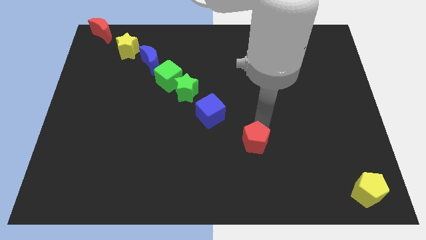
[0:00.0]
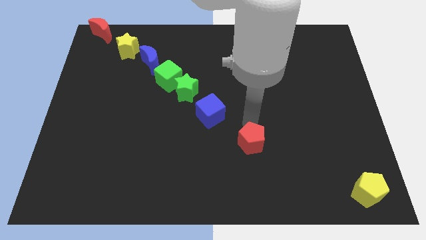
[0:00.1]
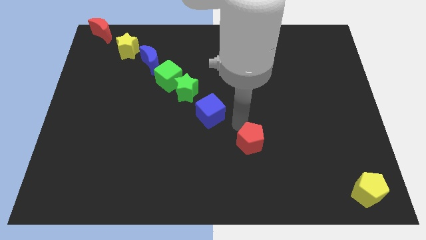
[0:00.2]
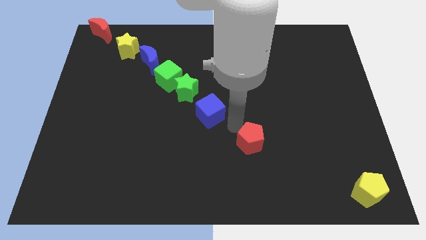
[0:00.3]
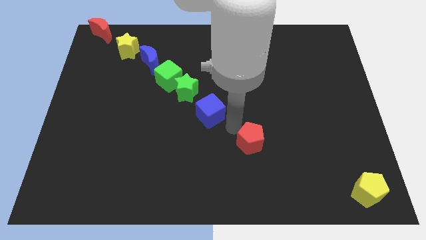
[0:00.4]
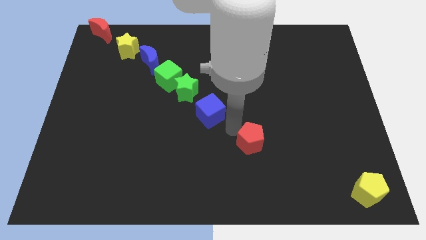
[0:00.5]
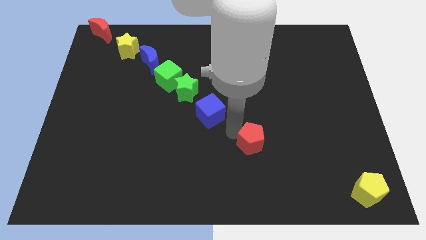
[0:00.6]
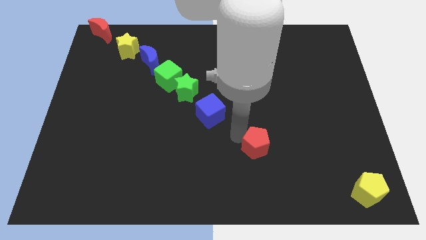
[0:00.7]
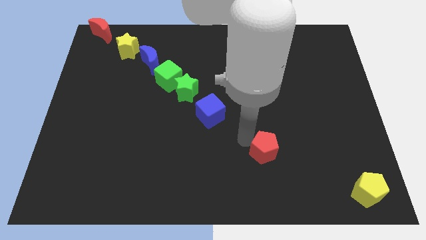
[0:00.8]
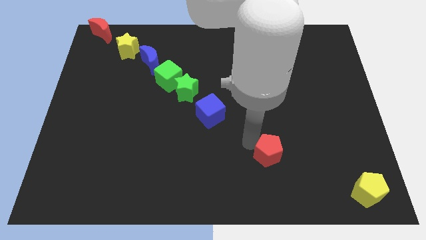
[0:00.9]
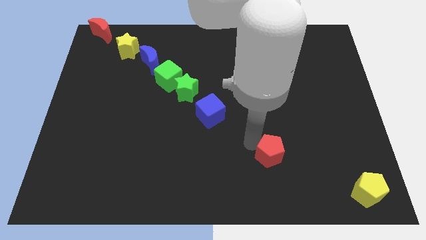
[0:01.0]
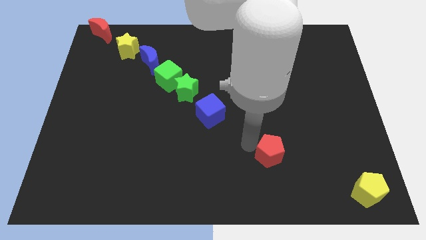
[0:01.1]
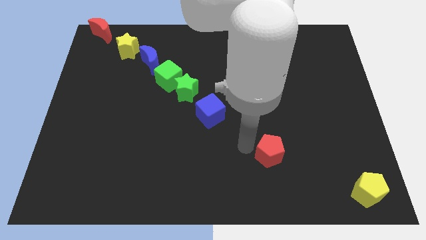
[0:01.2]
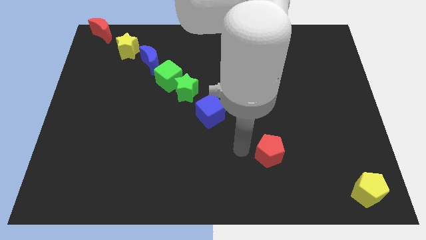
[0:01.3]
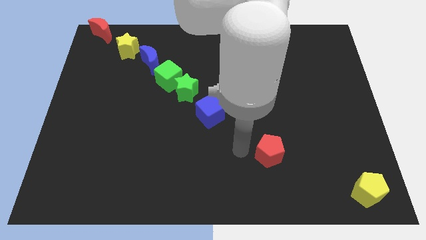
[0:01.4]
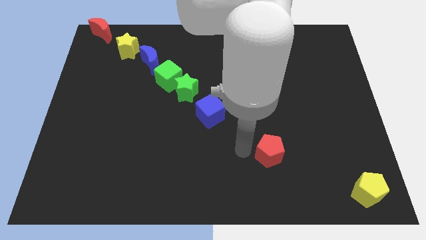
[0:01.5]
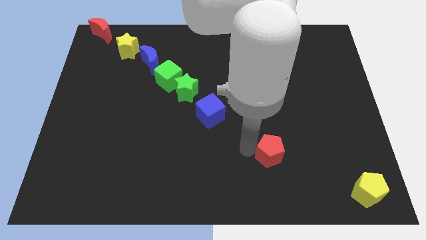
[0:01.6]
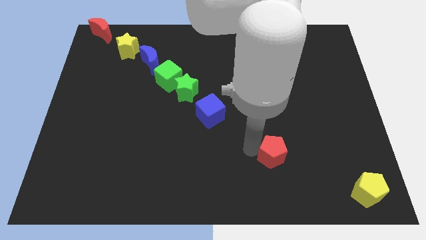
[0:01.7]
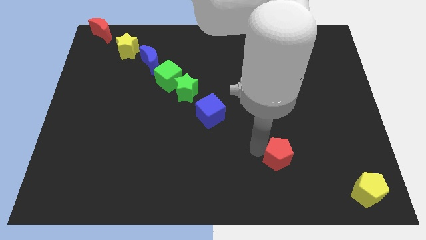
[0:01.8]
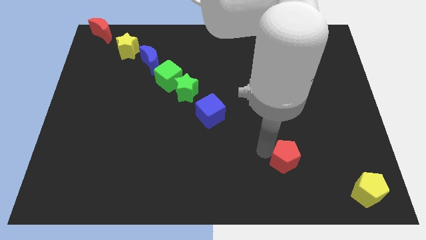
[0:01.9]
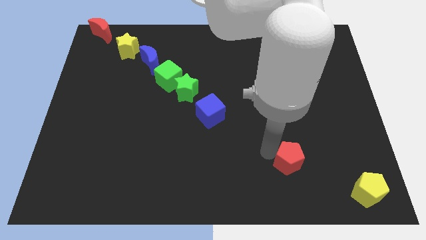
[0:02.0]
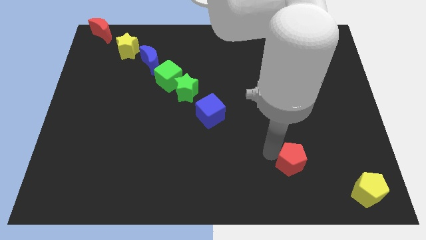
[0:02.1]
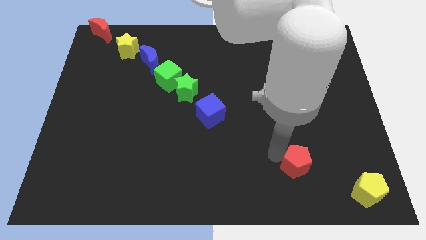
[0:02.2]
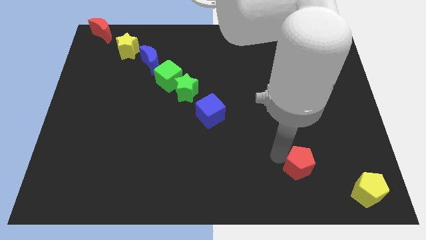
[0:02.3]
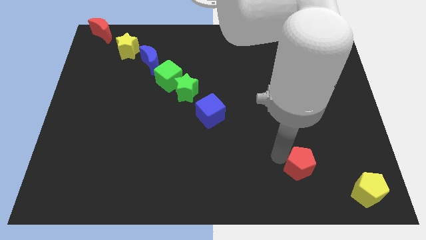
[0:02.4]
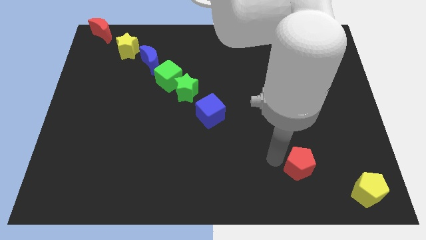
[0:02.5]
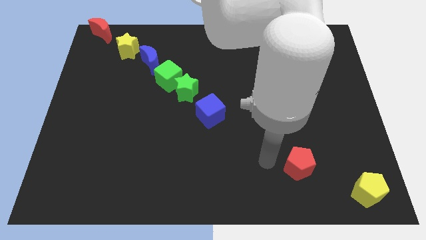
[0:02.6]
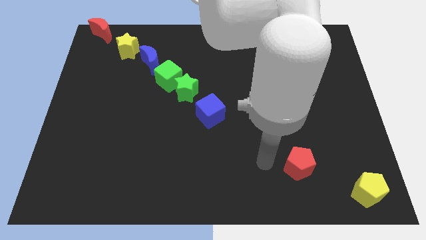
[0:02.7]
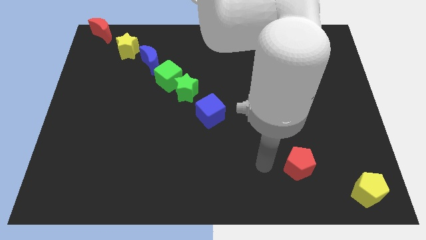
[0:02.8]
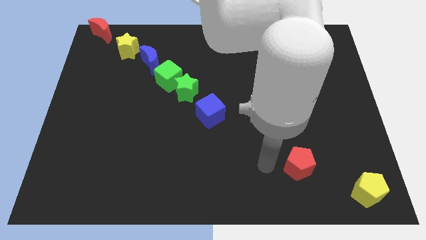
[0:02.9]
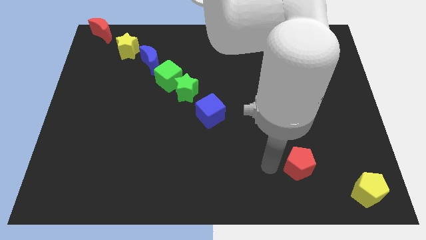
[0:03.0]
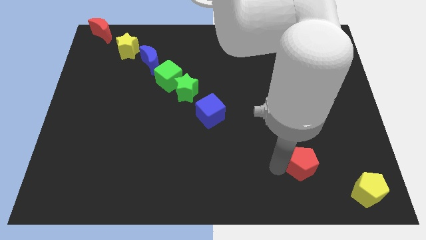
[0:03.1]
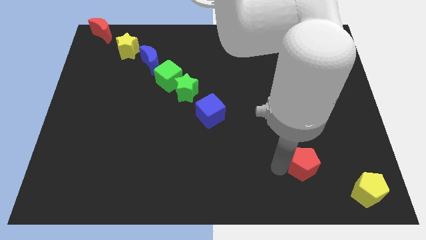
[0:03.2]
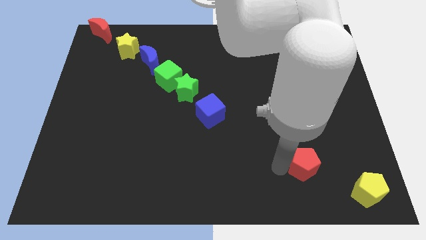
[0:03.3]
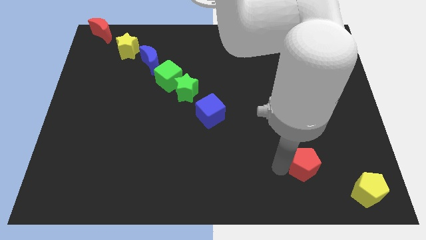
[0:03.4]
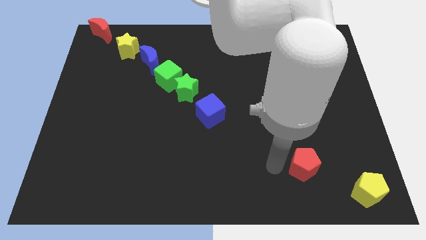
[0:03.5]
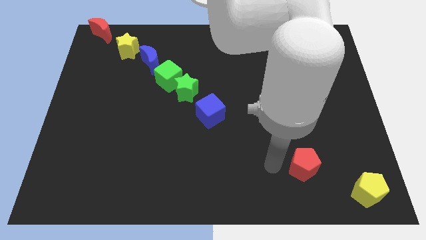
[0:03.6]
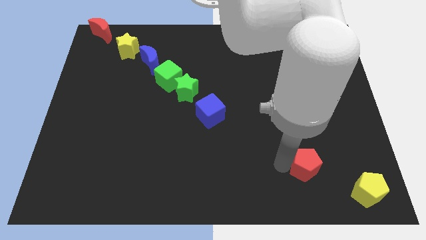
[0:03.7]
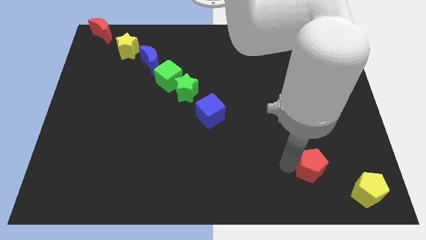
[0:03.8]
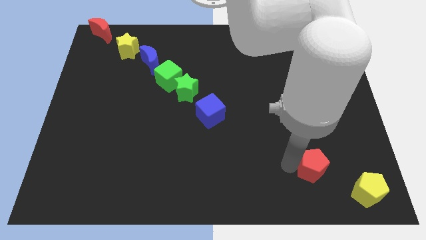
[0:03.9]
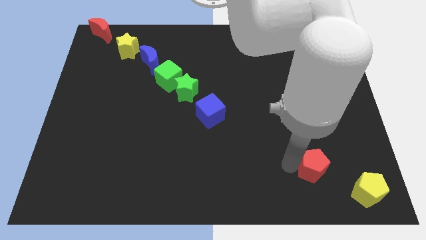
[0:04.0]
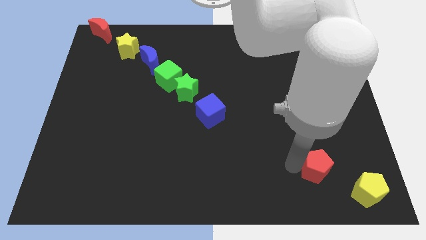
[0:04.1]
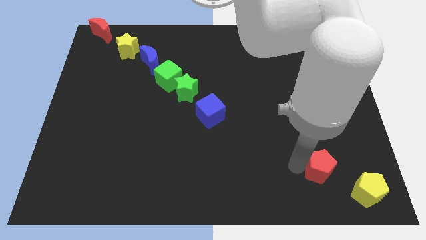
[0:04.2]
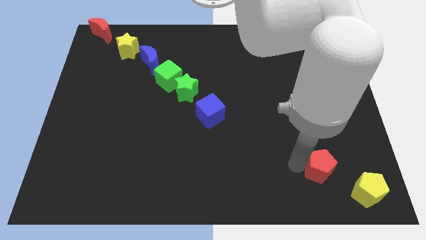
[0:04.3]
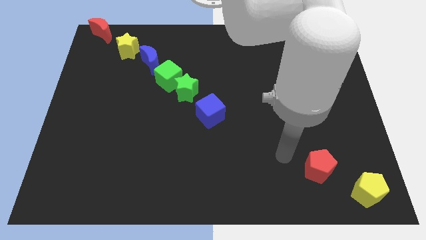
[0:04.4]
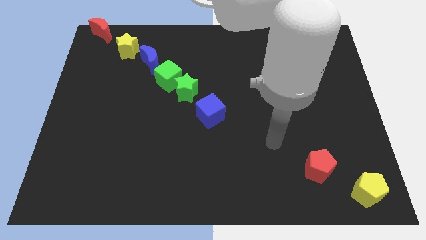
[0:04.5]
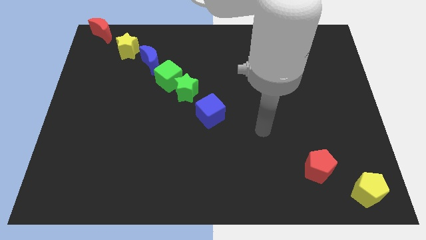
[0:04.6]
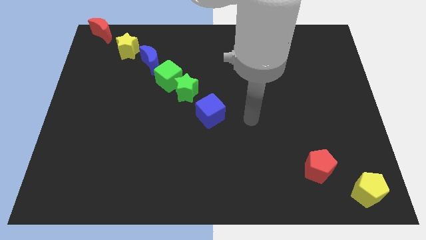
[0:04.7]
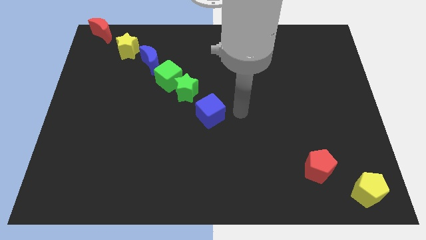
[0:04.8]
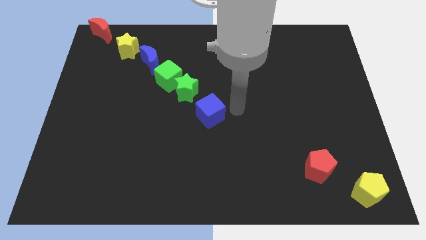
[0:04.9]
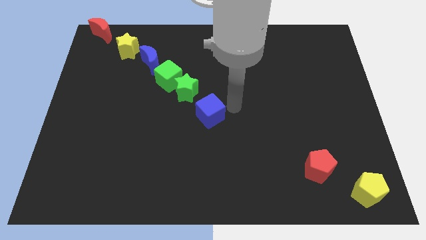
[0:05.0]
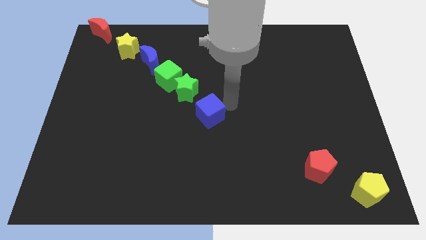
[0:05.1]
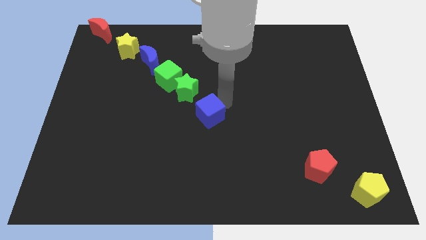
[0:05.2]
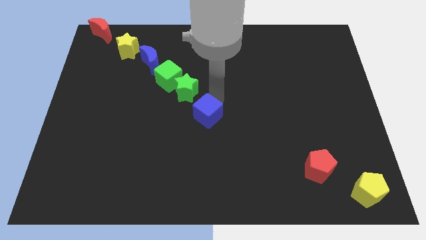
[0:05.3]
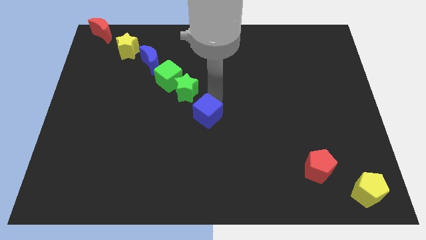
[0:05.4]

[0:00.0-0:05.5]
move red pentagon diagonally above yellow pentagon

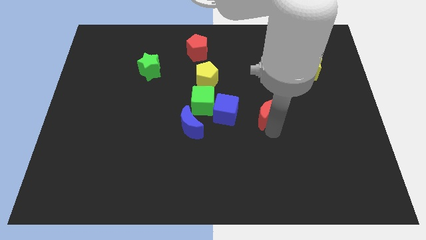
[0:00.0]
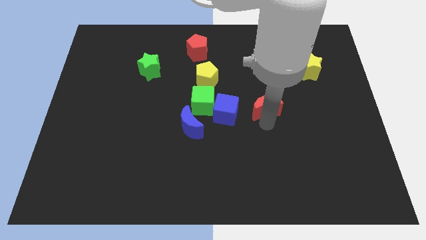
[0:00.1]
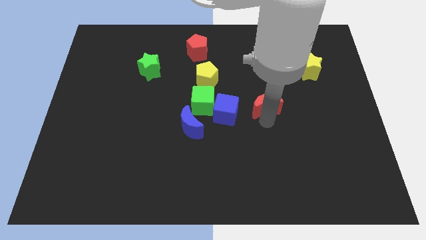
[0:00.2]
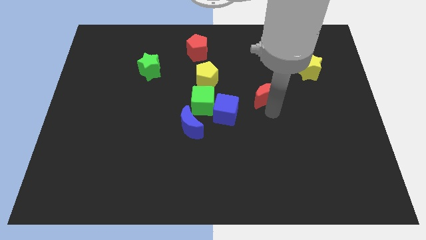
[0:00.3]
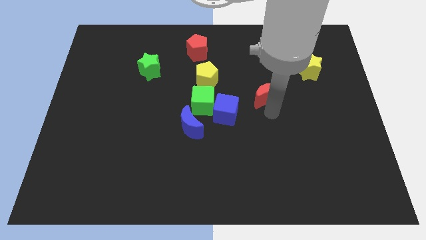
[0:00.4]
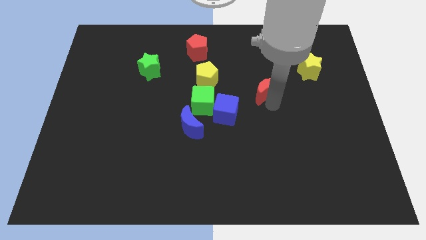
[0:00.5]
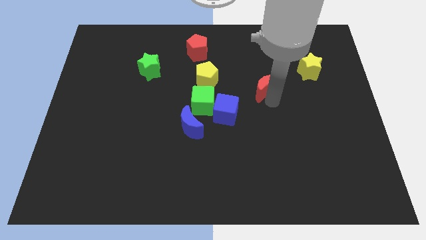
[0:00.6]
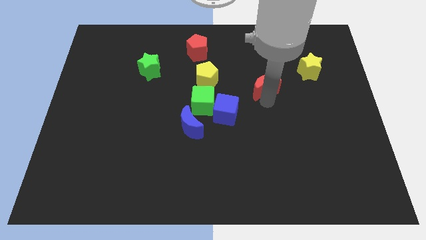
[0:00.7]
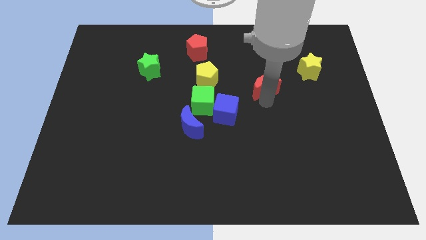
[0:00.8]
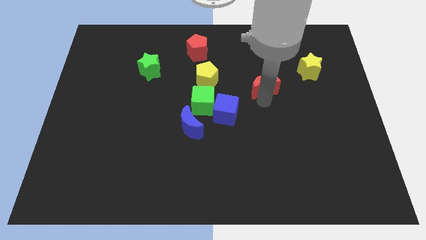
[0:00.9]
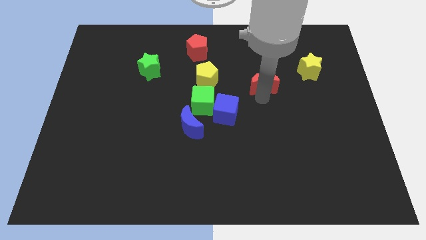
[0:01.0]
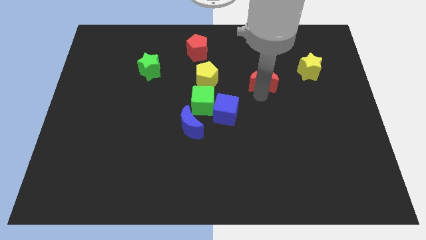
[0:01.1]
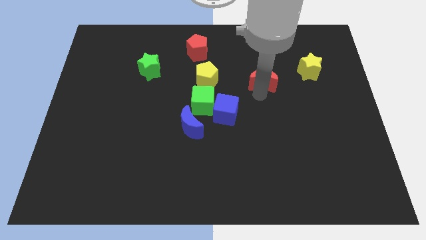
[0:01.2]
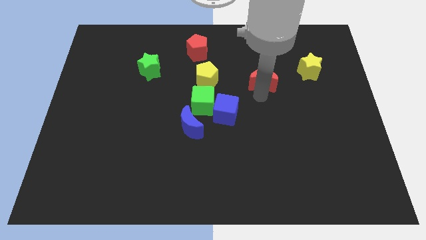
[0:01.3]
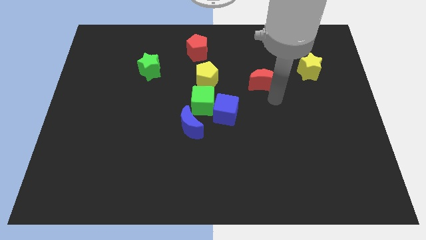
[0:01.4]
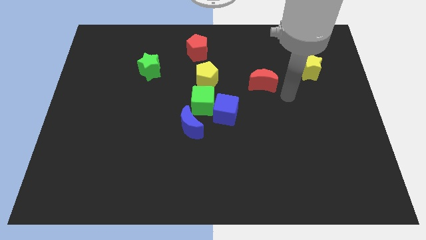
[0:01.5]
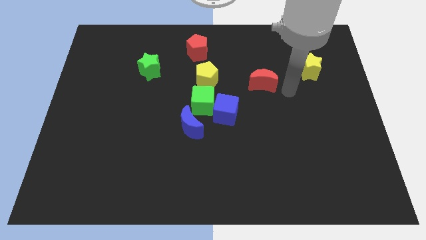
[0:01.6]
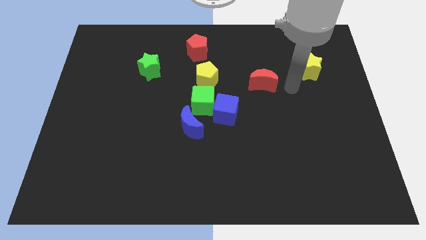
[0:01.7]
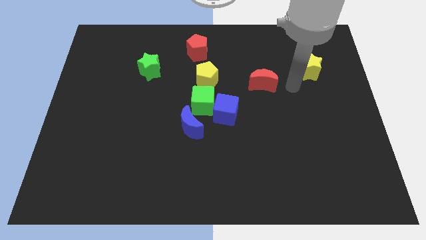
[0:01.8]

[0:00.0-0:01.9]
move red moon to the right of yellow pentagon

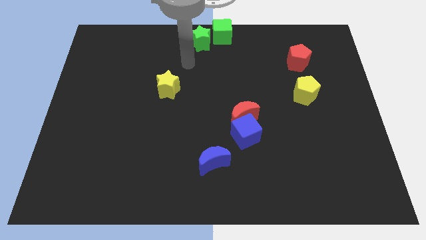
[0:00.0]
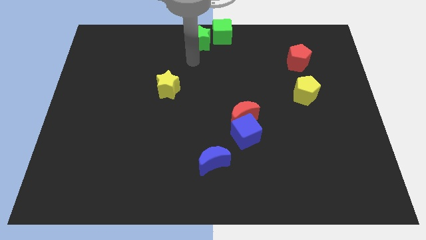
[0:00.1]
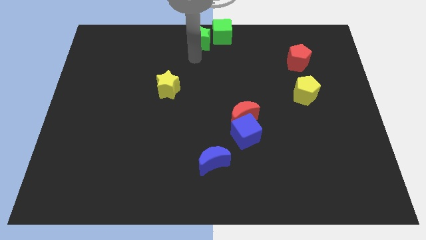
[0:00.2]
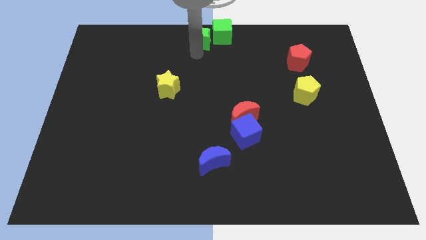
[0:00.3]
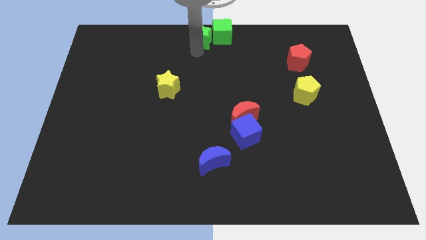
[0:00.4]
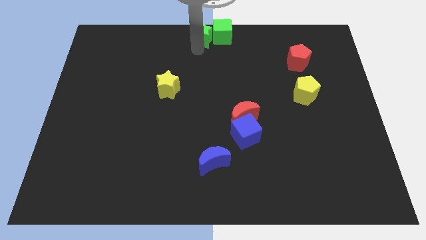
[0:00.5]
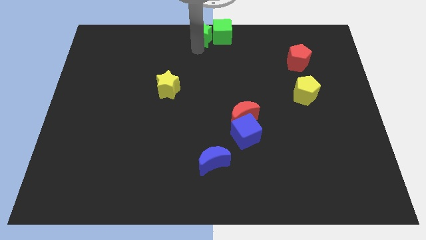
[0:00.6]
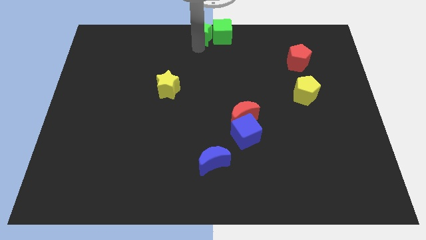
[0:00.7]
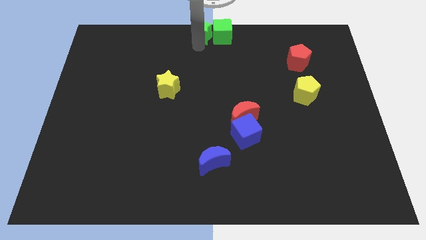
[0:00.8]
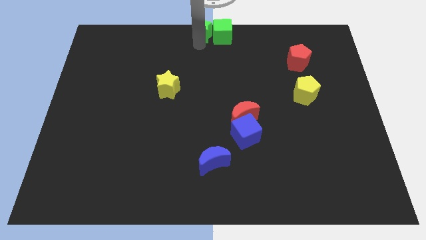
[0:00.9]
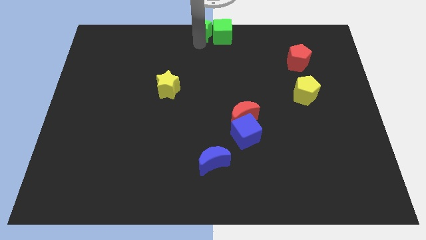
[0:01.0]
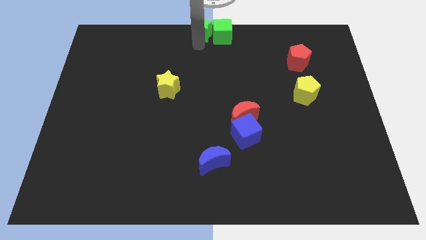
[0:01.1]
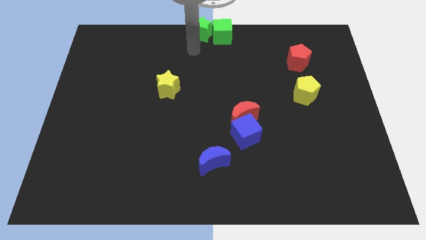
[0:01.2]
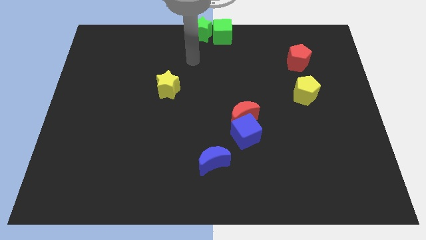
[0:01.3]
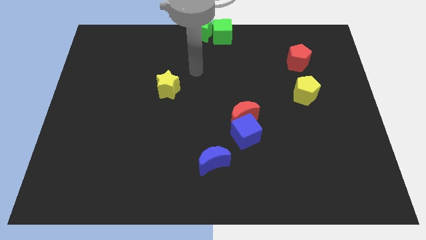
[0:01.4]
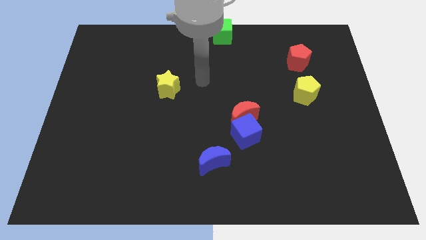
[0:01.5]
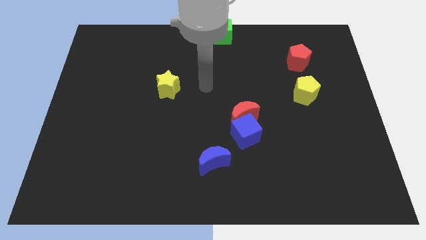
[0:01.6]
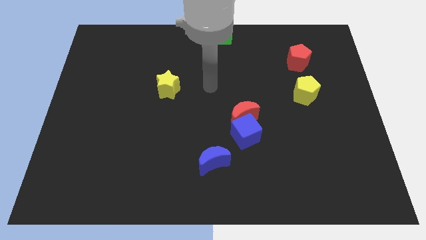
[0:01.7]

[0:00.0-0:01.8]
move the green star to the left of the green cube
